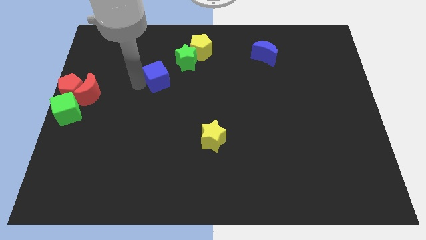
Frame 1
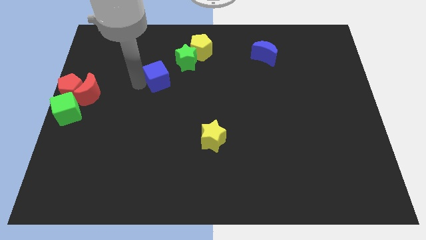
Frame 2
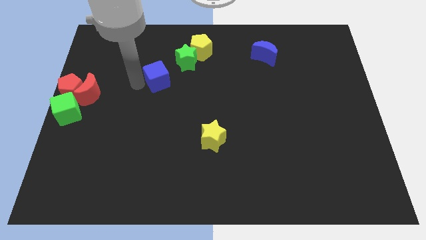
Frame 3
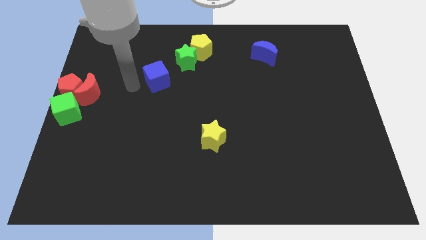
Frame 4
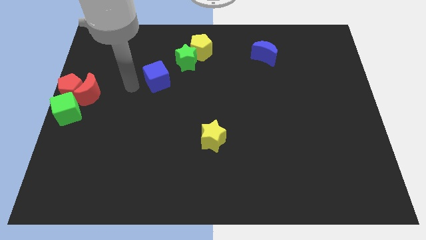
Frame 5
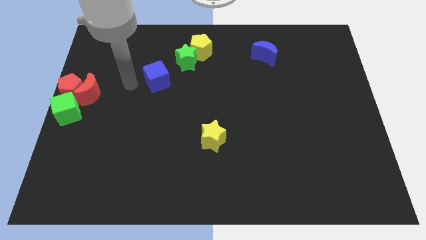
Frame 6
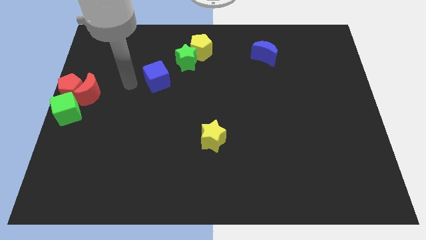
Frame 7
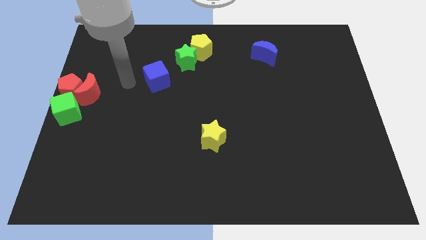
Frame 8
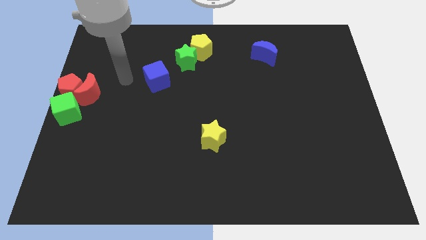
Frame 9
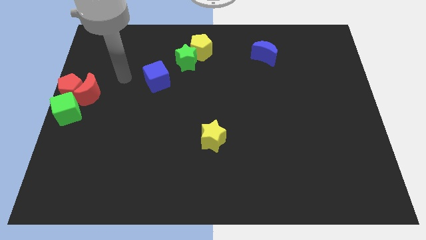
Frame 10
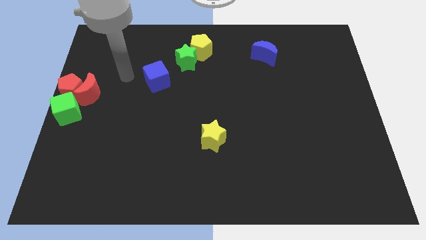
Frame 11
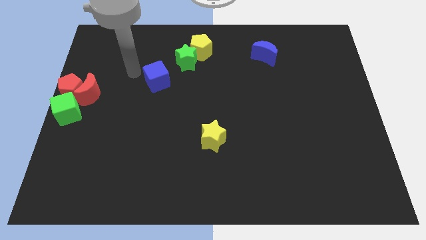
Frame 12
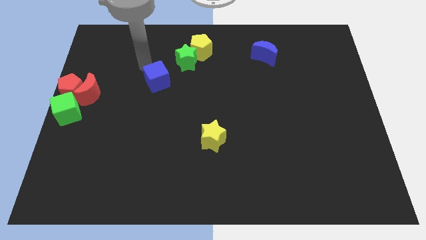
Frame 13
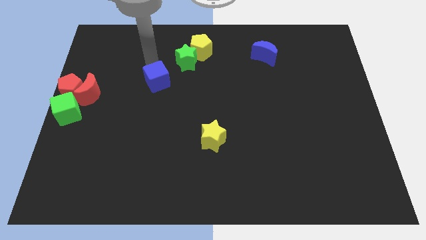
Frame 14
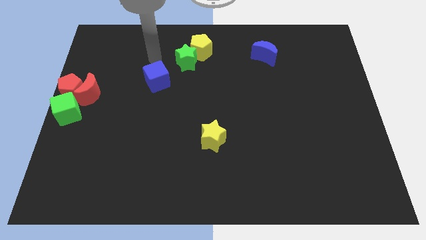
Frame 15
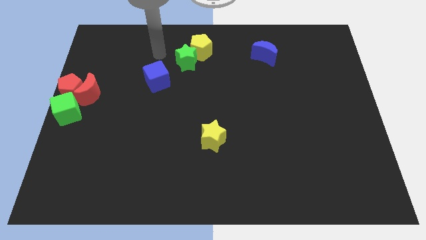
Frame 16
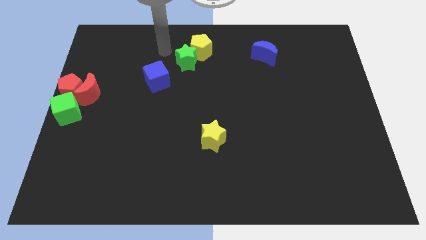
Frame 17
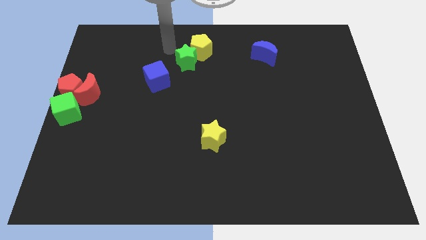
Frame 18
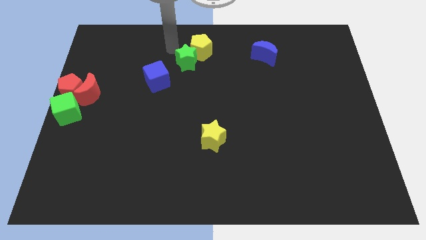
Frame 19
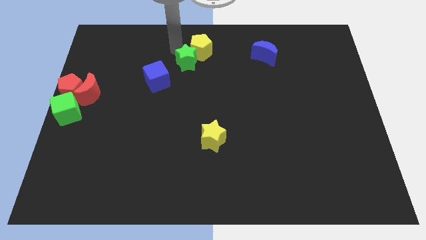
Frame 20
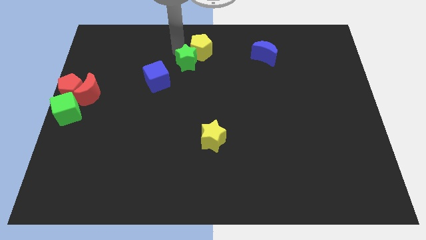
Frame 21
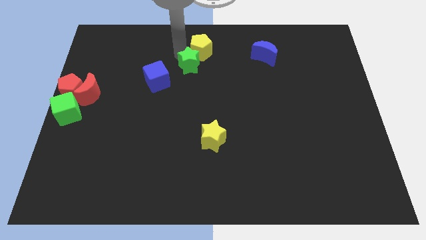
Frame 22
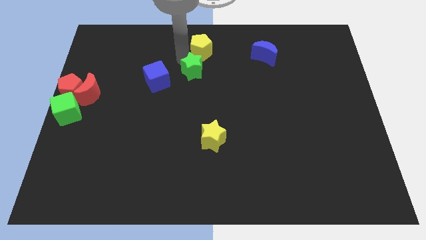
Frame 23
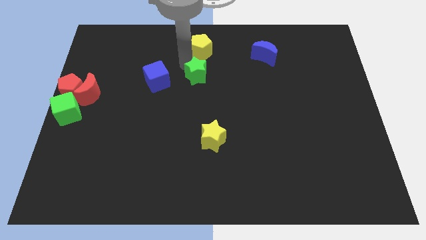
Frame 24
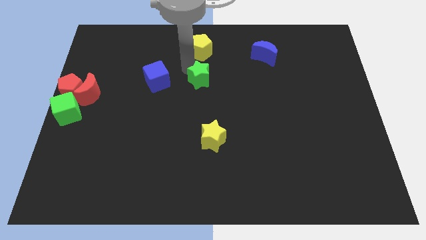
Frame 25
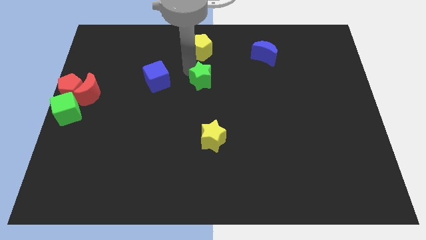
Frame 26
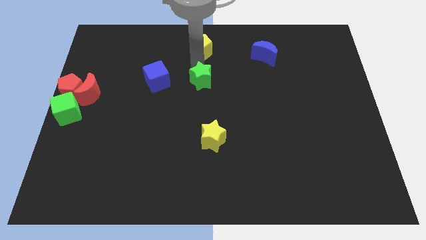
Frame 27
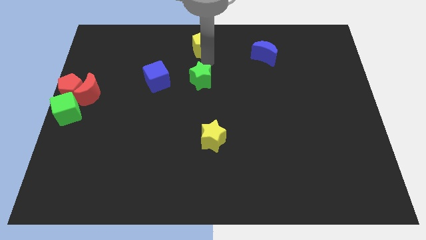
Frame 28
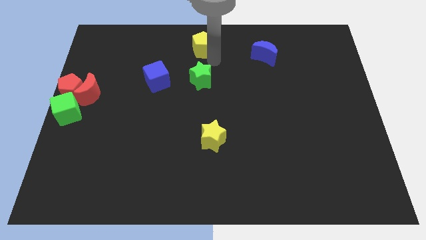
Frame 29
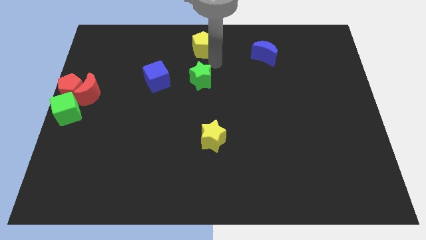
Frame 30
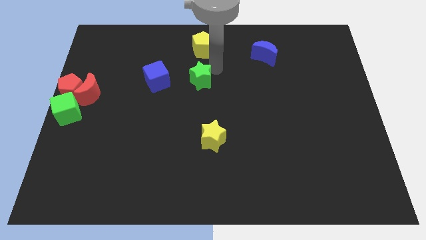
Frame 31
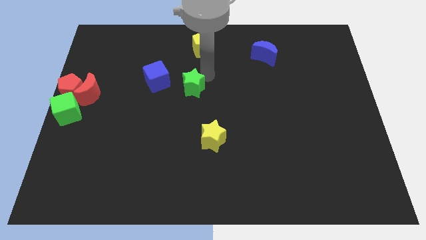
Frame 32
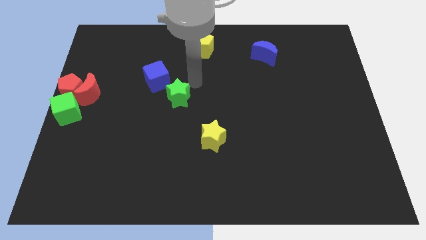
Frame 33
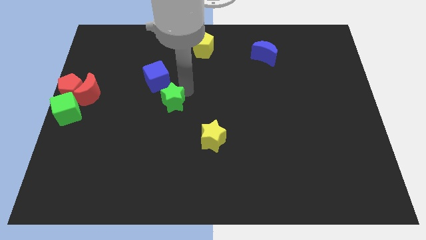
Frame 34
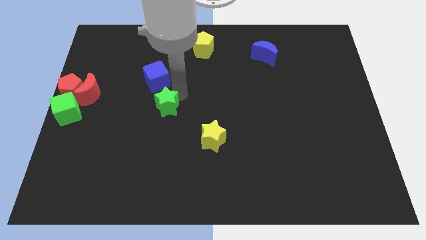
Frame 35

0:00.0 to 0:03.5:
place green star below blue cube

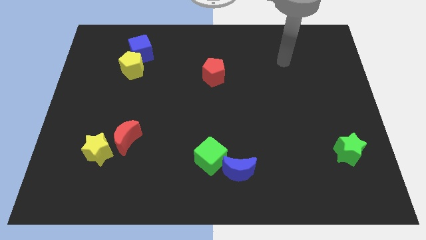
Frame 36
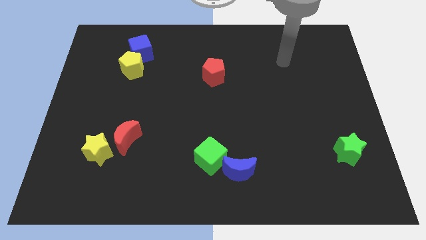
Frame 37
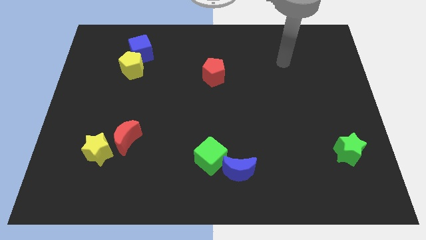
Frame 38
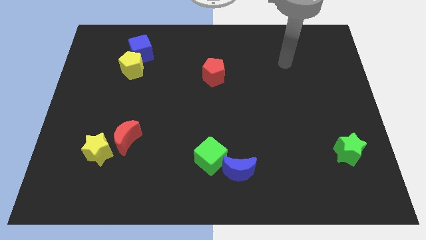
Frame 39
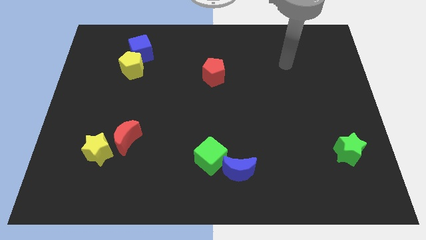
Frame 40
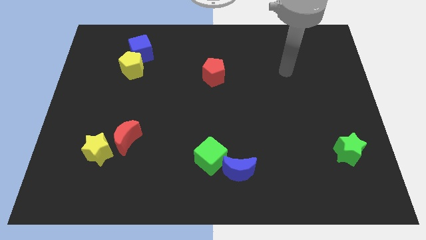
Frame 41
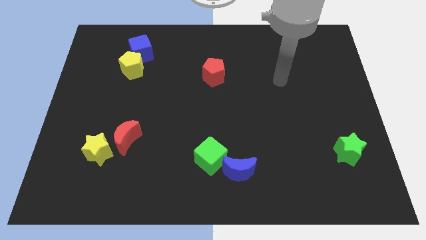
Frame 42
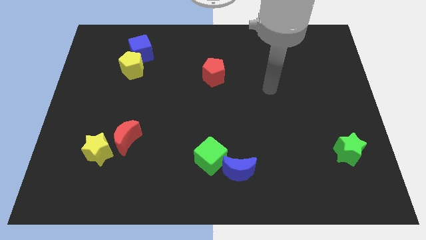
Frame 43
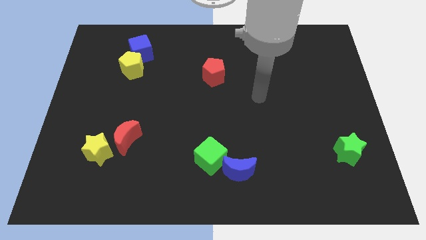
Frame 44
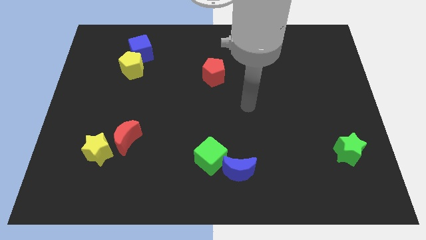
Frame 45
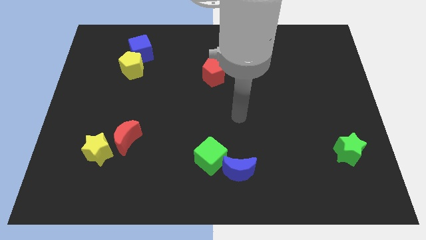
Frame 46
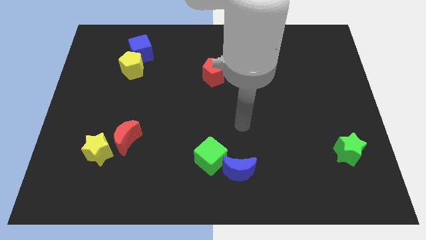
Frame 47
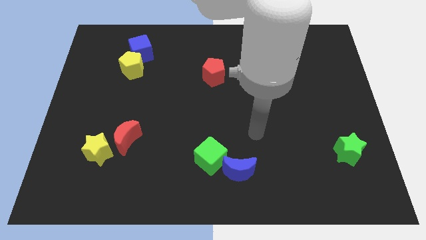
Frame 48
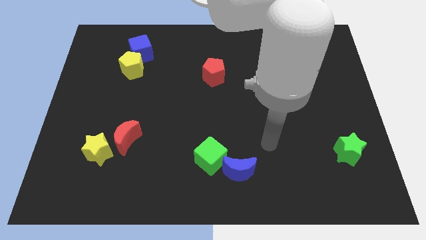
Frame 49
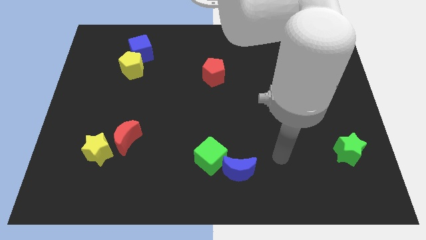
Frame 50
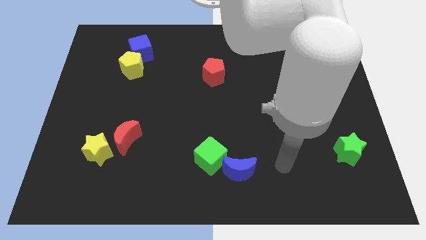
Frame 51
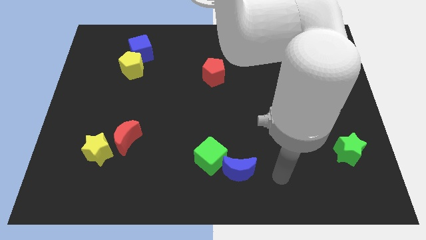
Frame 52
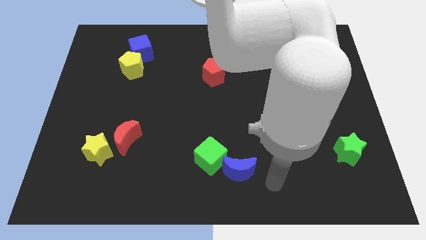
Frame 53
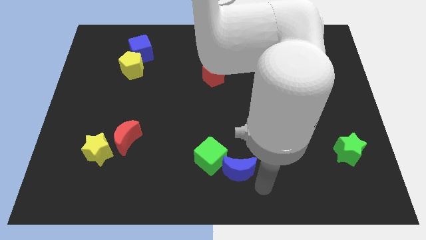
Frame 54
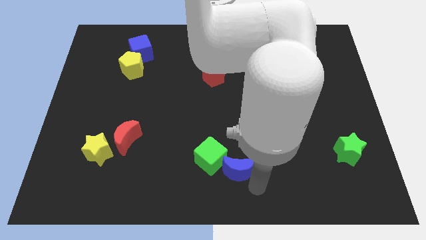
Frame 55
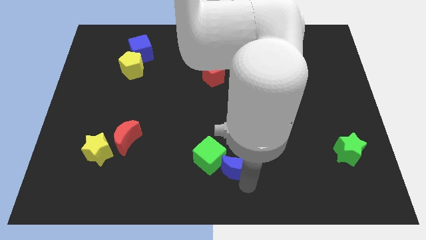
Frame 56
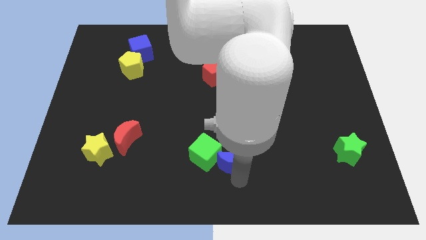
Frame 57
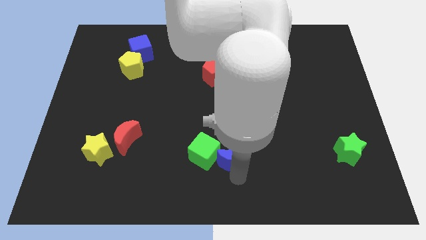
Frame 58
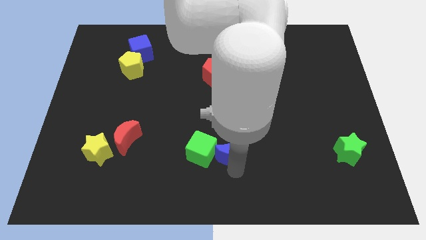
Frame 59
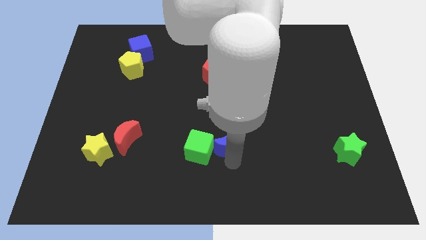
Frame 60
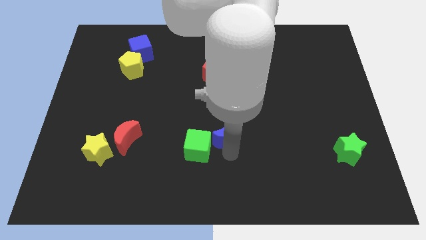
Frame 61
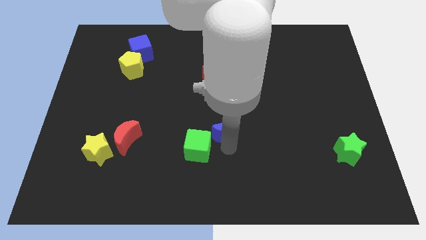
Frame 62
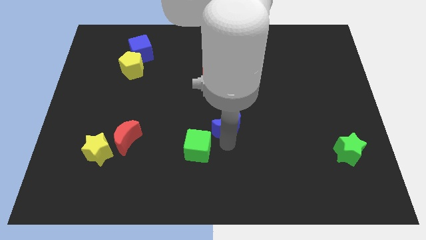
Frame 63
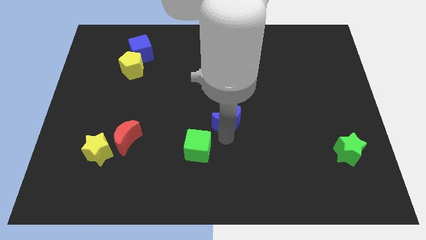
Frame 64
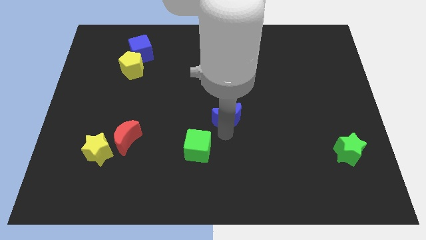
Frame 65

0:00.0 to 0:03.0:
separate the blue moon from the green cube

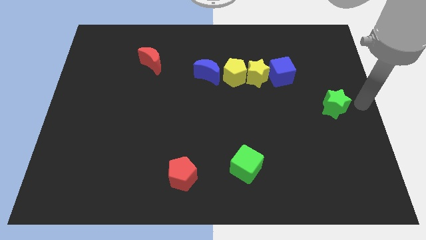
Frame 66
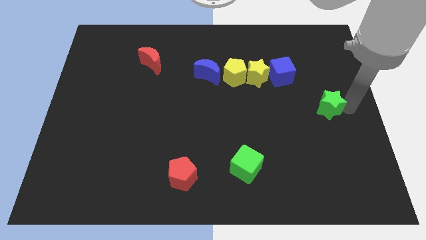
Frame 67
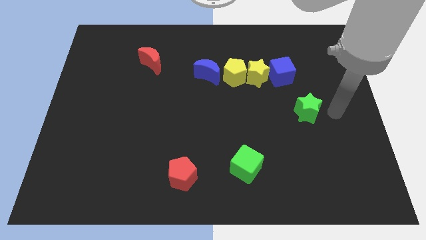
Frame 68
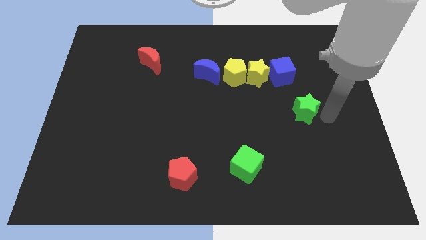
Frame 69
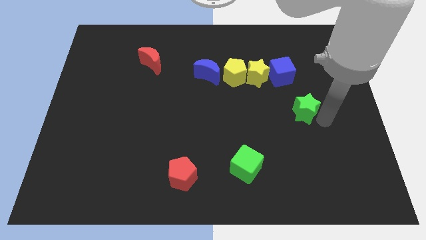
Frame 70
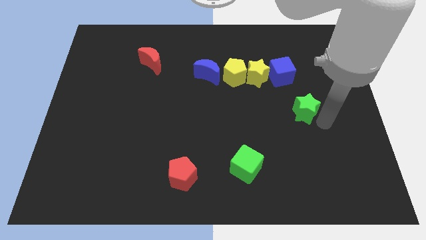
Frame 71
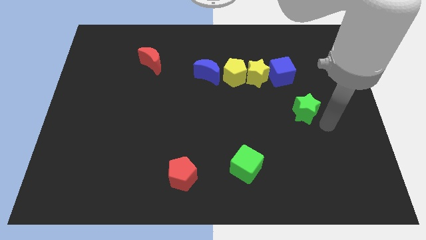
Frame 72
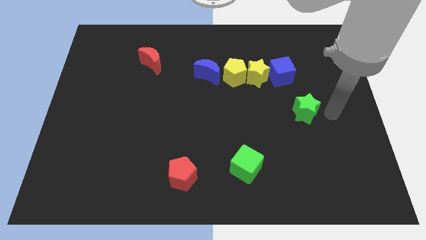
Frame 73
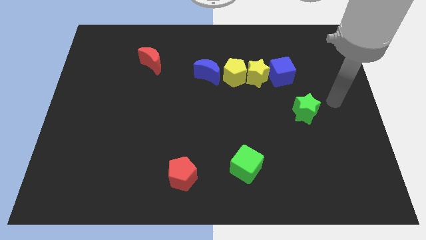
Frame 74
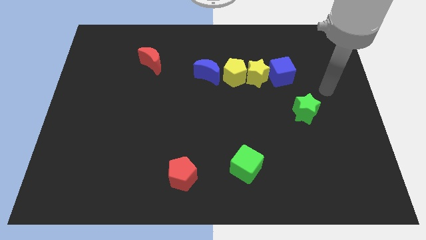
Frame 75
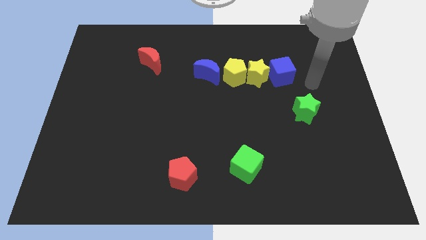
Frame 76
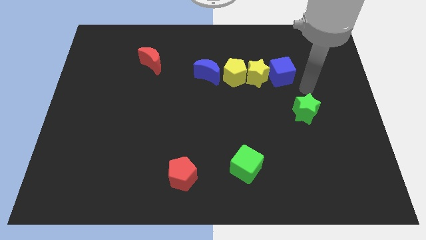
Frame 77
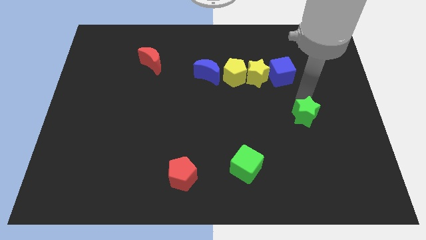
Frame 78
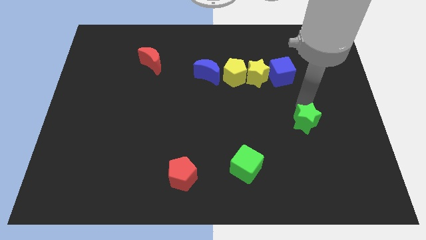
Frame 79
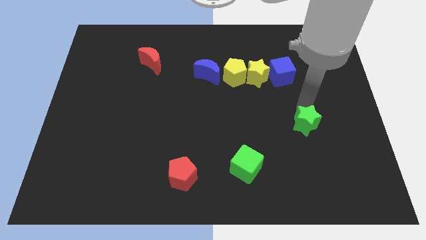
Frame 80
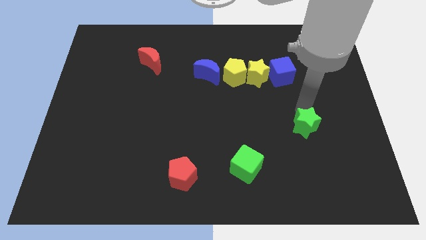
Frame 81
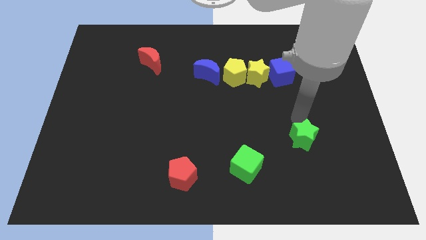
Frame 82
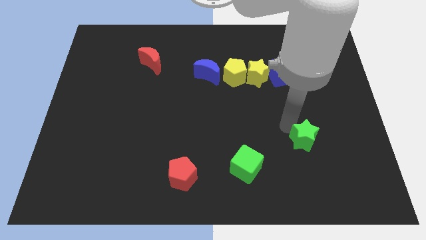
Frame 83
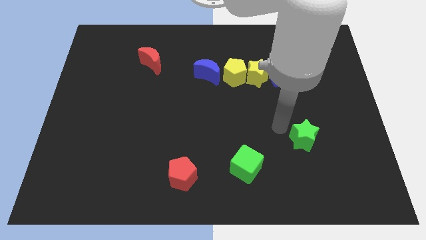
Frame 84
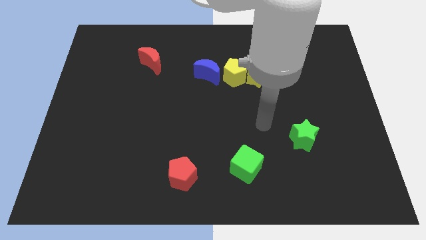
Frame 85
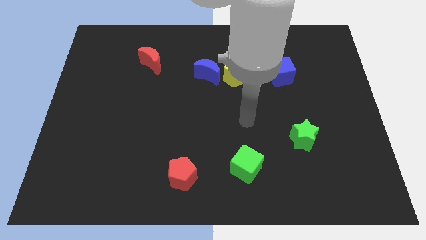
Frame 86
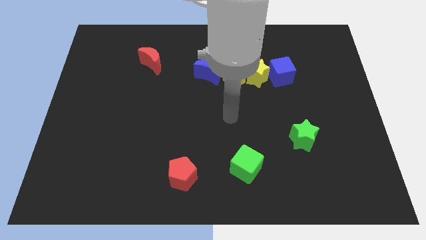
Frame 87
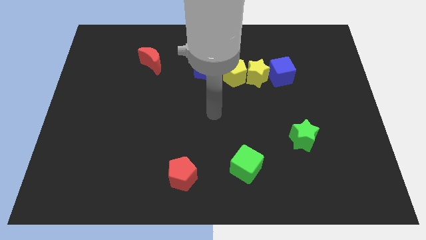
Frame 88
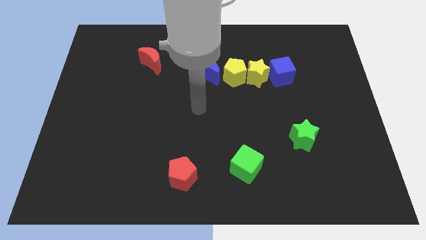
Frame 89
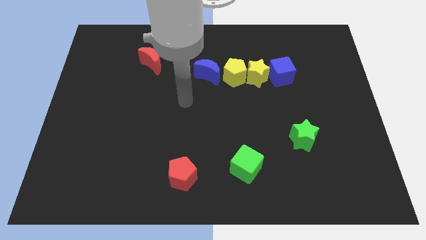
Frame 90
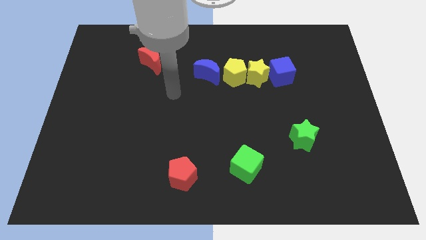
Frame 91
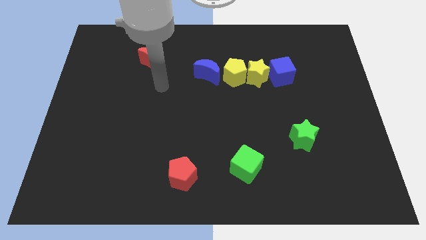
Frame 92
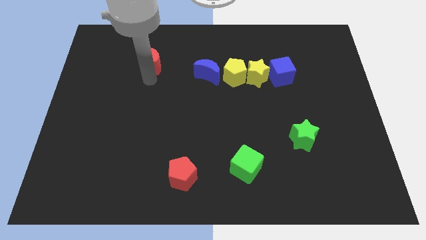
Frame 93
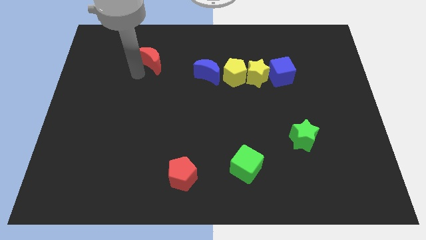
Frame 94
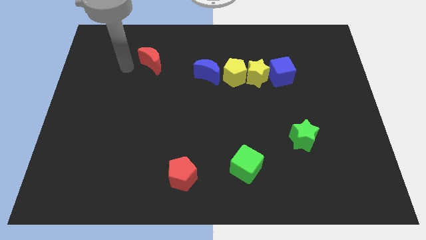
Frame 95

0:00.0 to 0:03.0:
place the green star at the top right side of the green cube
